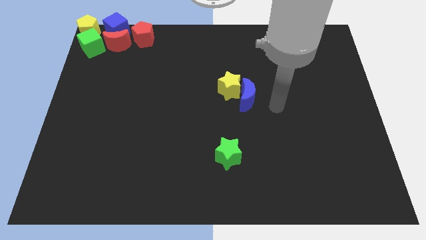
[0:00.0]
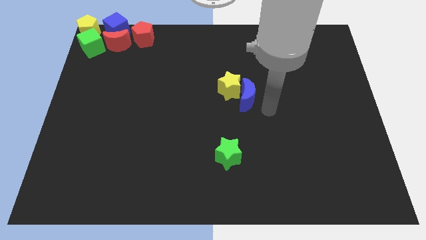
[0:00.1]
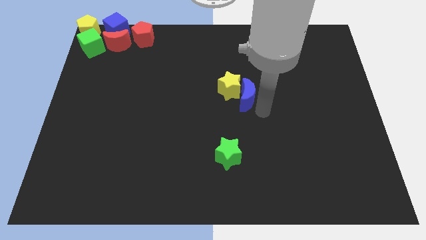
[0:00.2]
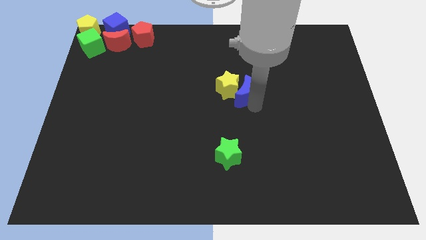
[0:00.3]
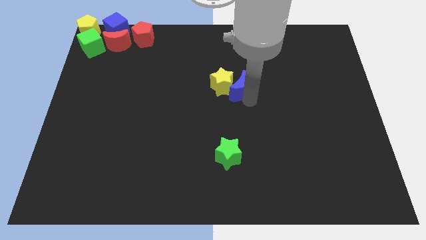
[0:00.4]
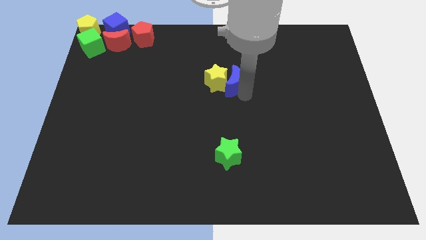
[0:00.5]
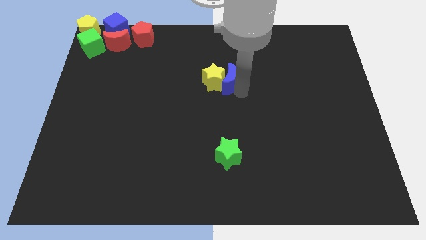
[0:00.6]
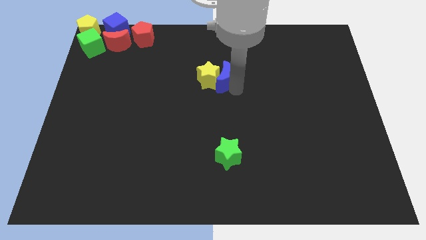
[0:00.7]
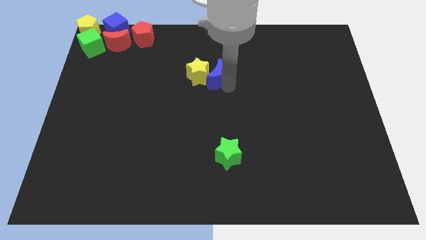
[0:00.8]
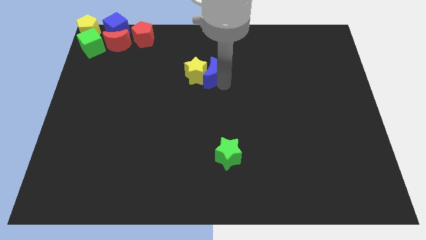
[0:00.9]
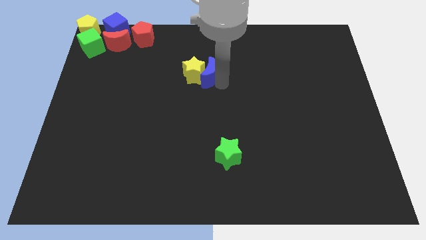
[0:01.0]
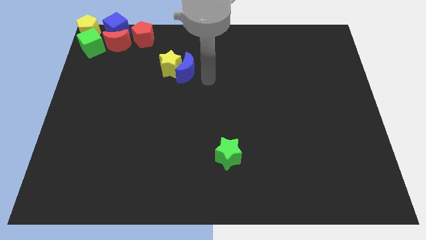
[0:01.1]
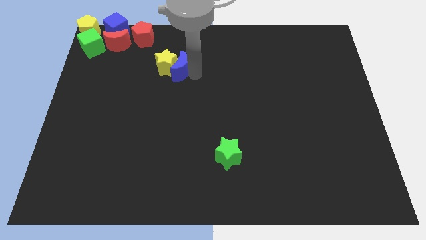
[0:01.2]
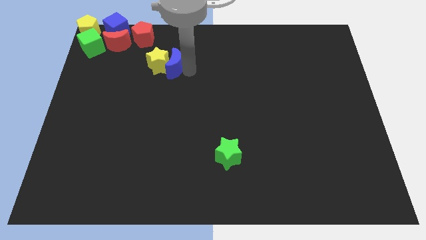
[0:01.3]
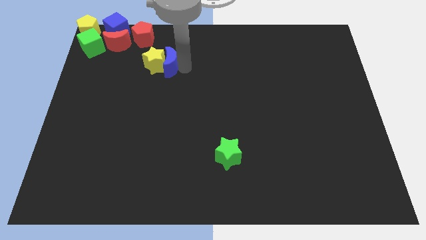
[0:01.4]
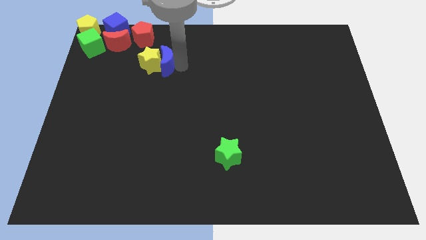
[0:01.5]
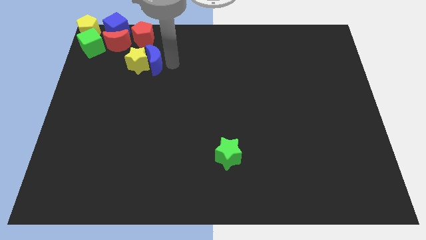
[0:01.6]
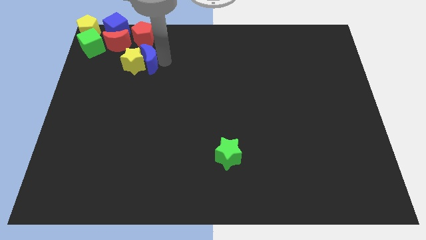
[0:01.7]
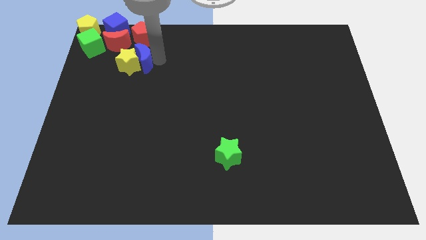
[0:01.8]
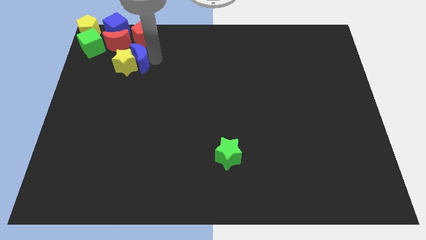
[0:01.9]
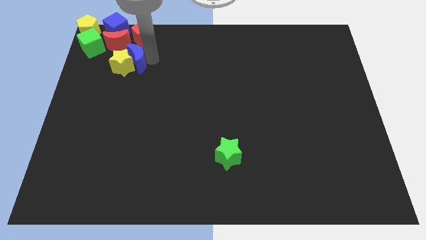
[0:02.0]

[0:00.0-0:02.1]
move blue moon and yellow star towards the top left corner

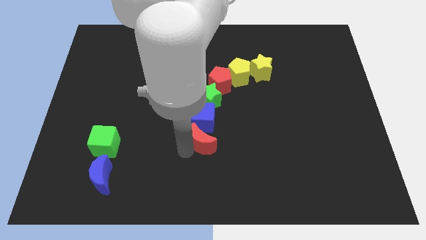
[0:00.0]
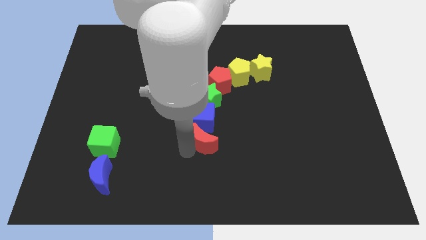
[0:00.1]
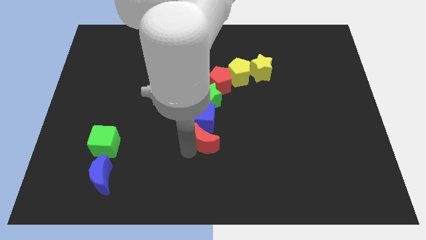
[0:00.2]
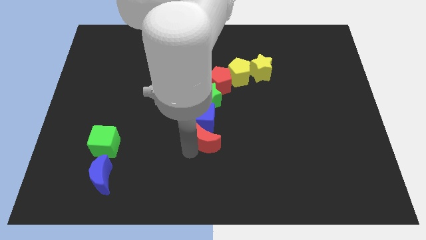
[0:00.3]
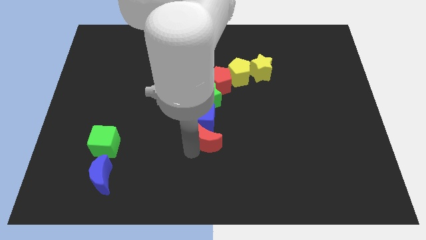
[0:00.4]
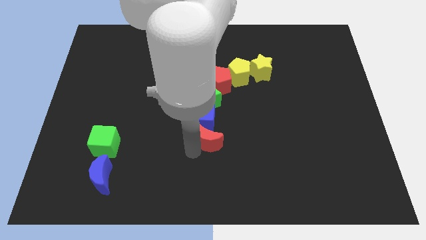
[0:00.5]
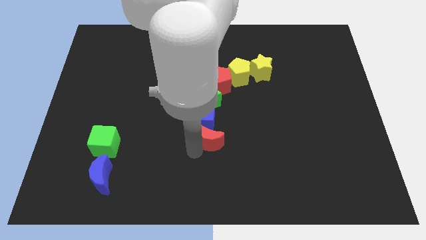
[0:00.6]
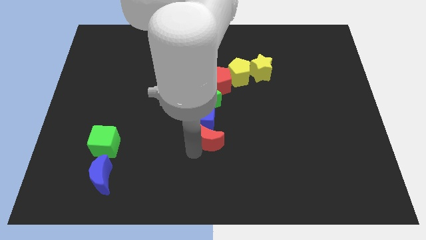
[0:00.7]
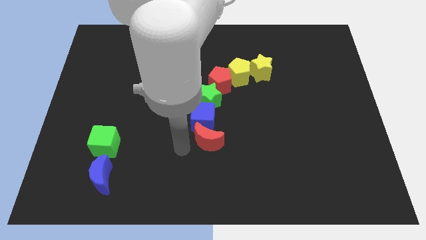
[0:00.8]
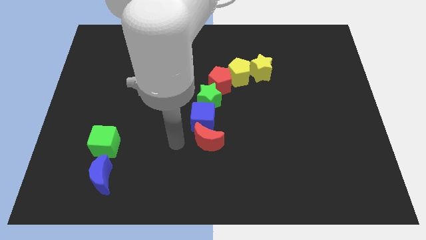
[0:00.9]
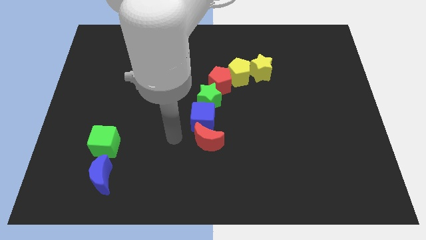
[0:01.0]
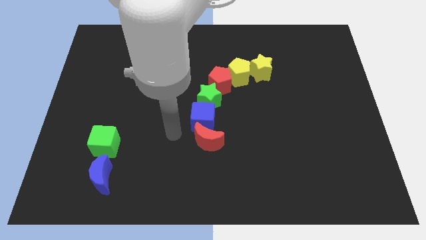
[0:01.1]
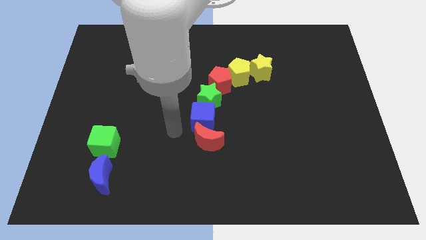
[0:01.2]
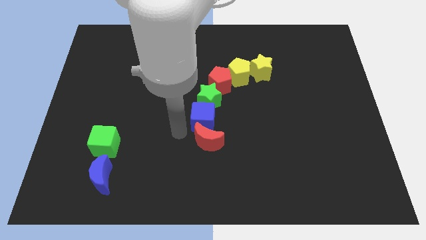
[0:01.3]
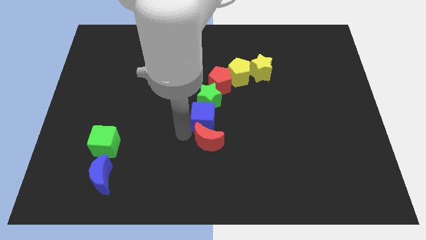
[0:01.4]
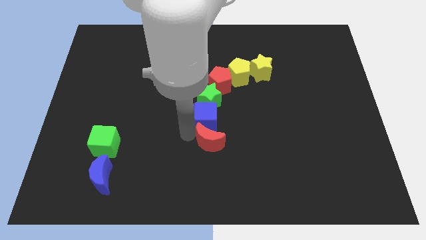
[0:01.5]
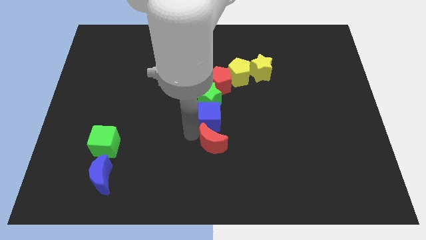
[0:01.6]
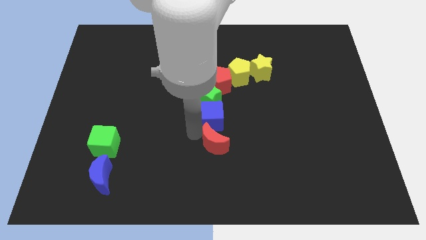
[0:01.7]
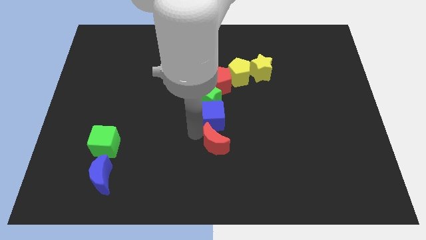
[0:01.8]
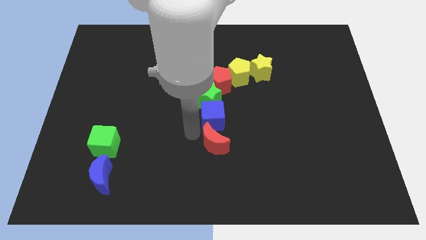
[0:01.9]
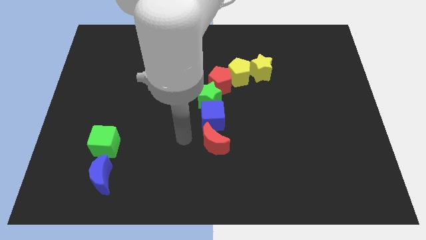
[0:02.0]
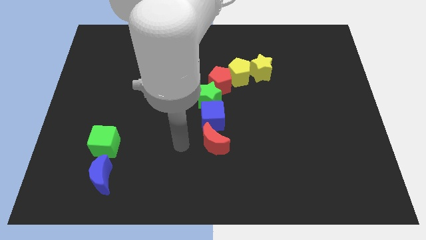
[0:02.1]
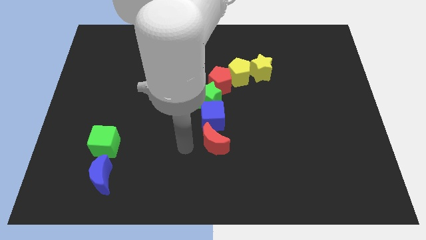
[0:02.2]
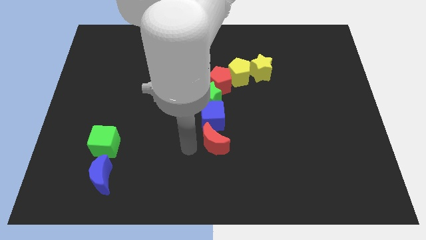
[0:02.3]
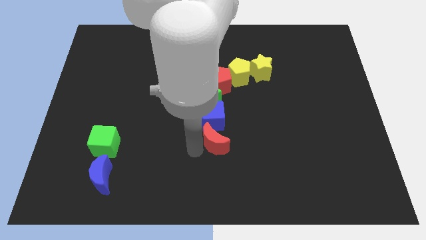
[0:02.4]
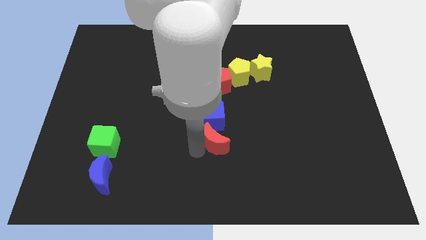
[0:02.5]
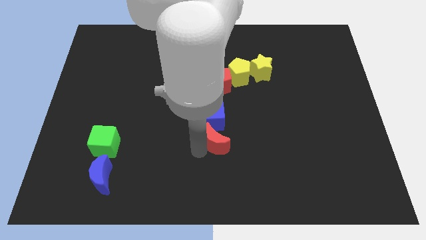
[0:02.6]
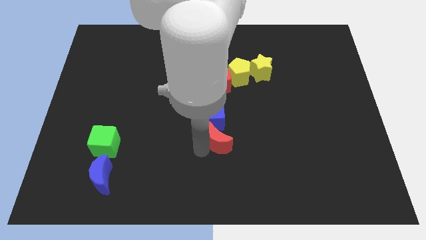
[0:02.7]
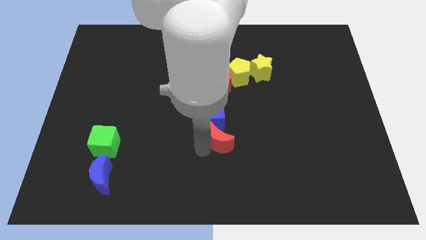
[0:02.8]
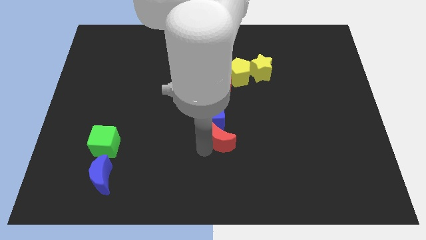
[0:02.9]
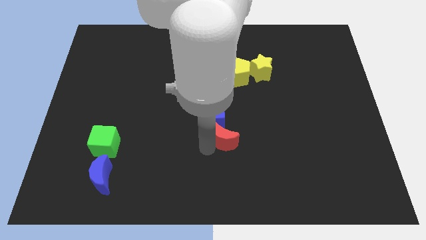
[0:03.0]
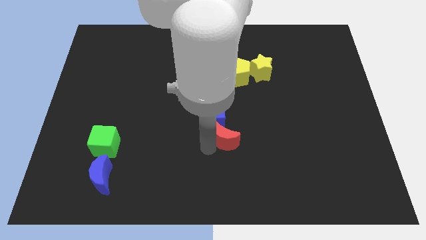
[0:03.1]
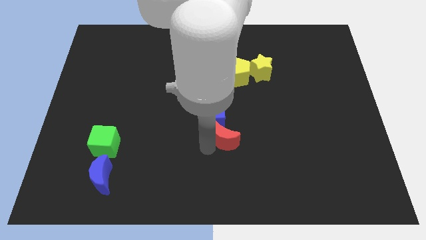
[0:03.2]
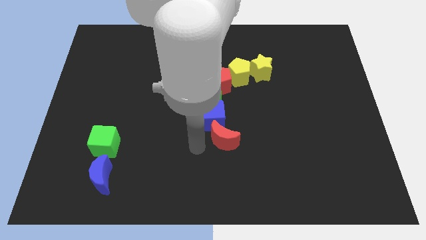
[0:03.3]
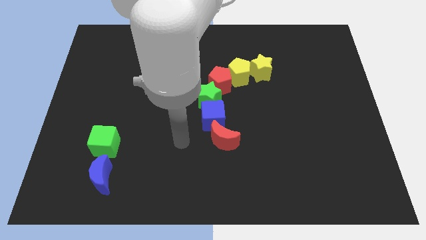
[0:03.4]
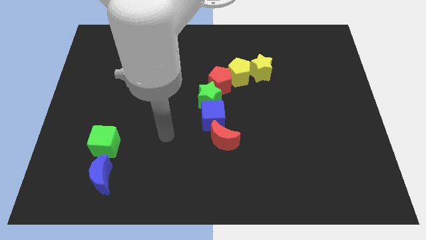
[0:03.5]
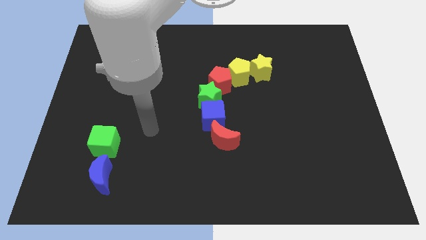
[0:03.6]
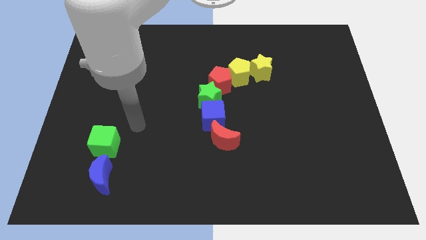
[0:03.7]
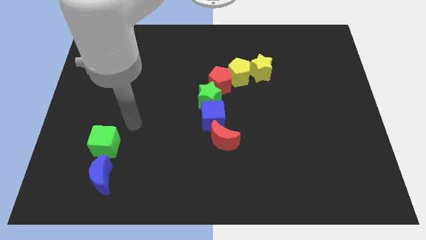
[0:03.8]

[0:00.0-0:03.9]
slightly push the red moon and blue cube at the center

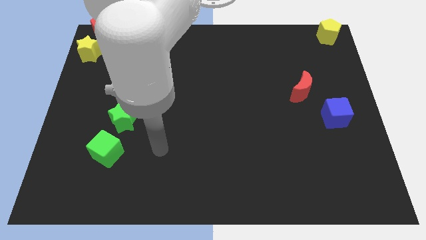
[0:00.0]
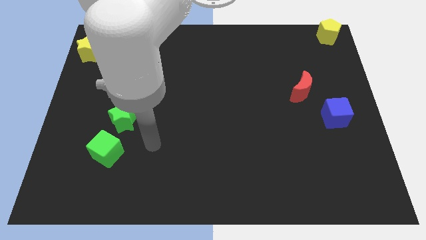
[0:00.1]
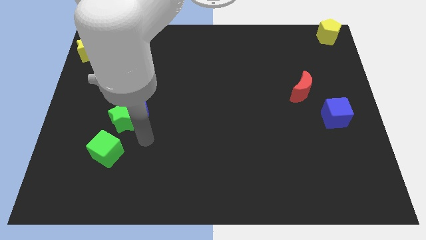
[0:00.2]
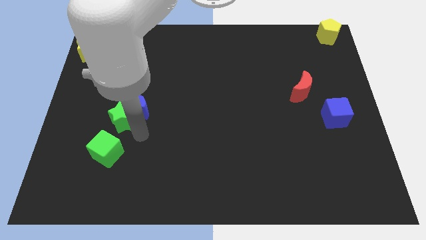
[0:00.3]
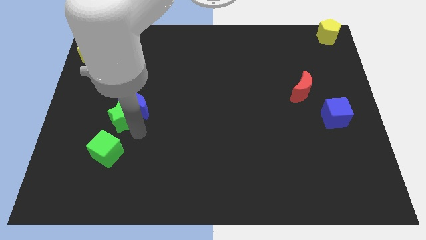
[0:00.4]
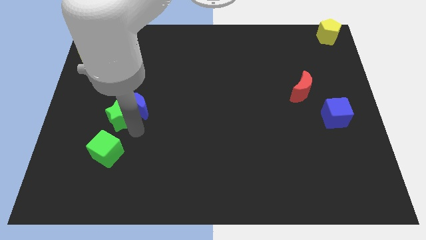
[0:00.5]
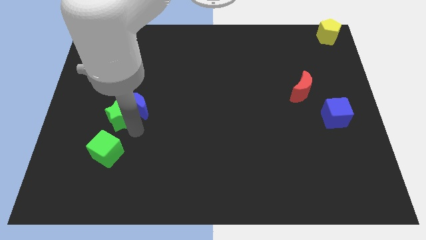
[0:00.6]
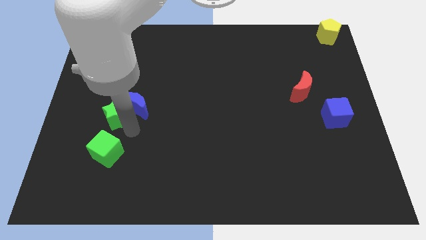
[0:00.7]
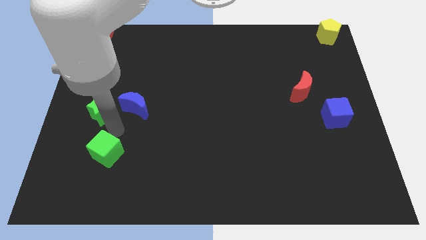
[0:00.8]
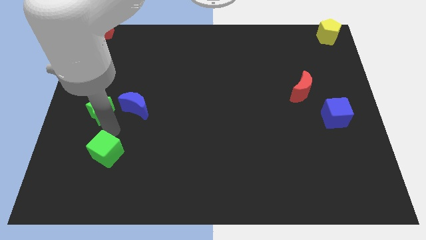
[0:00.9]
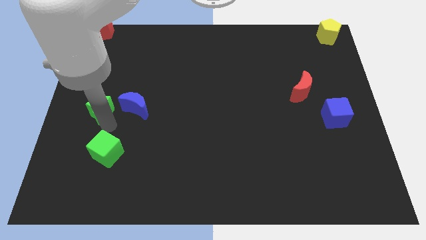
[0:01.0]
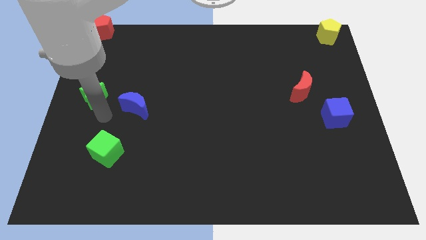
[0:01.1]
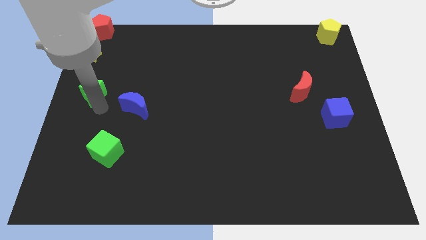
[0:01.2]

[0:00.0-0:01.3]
separate the green star and blue moon

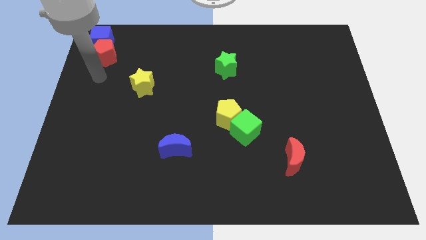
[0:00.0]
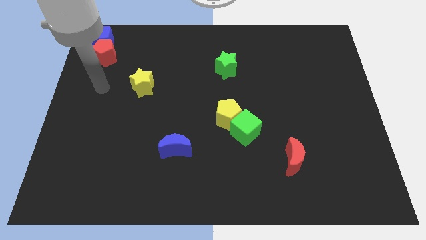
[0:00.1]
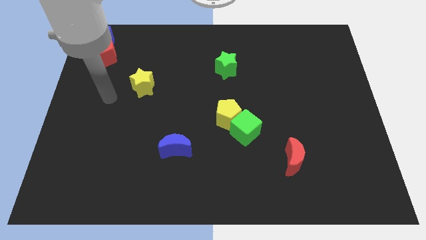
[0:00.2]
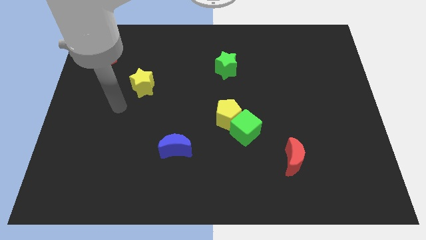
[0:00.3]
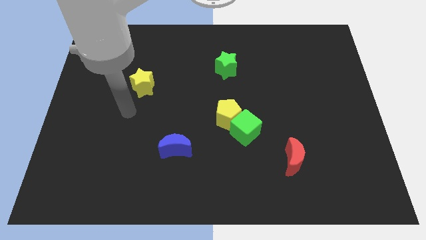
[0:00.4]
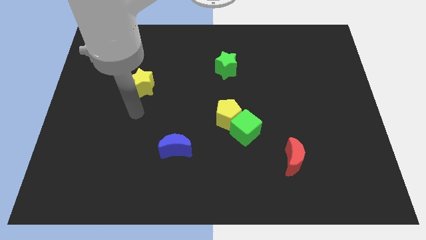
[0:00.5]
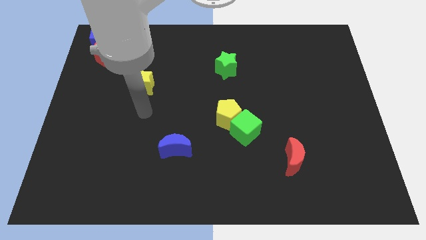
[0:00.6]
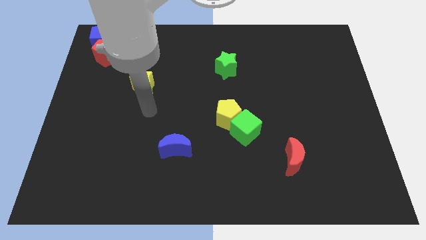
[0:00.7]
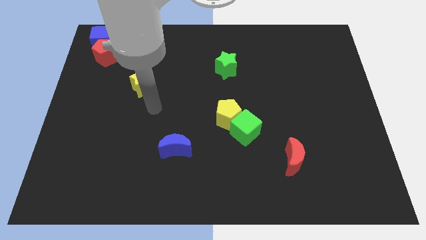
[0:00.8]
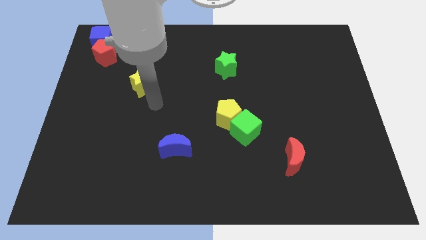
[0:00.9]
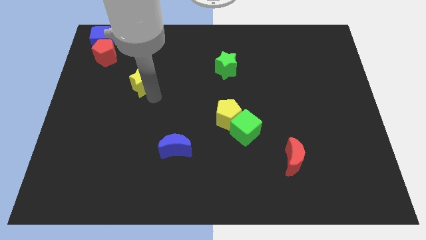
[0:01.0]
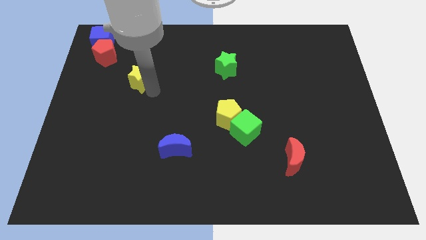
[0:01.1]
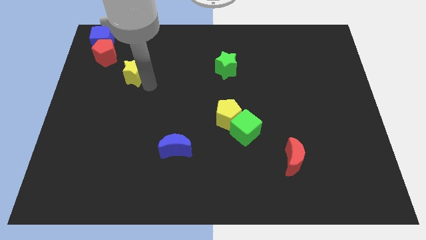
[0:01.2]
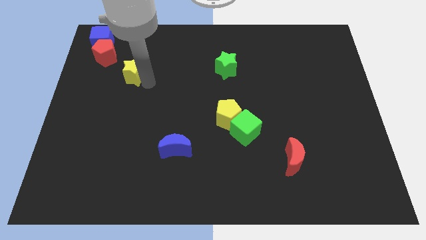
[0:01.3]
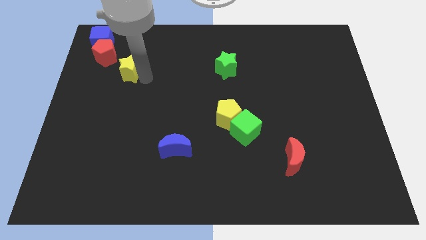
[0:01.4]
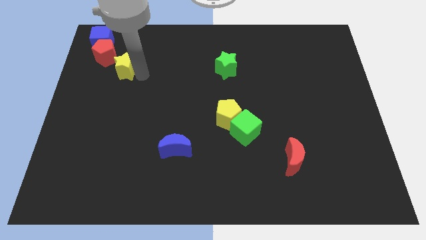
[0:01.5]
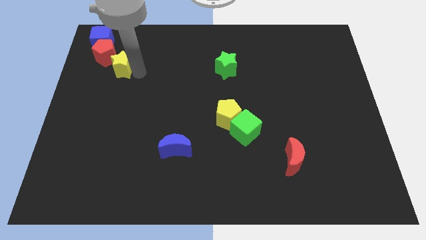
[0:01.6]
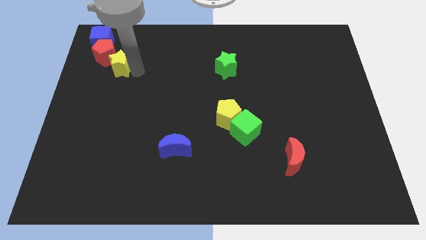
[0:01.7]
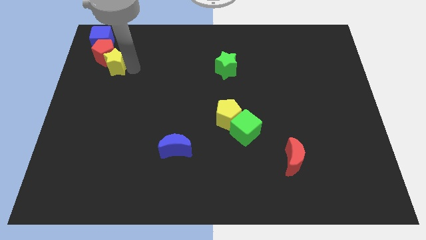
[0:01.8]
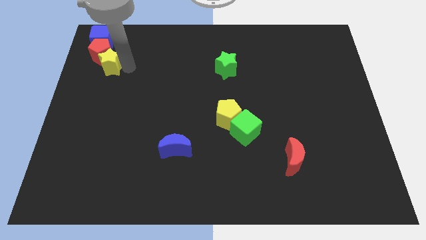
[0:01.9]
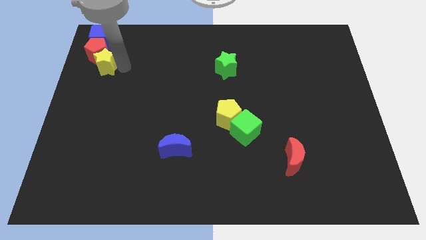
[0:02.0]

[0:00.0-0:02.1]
slide the yellow star into the bottom right side of the red pentagon
